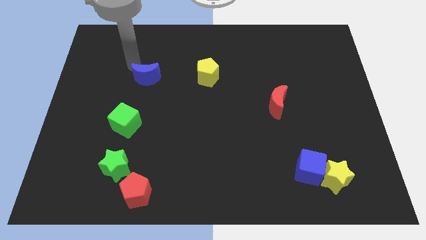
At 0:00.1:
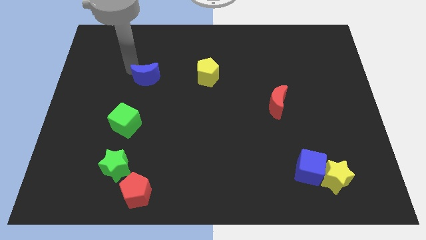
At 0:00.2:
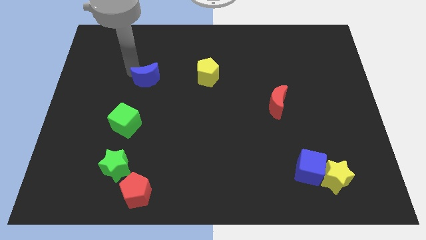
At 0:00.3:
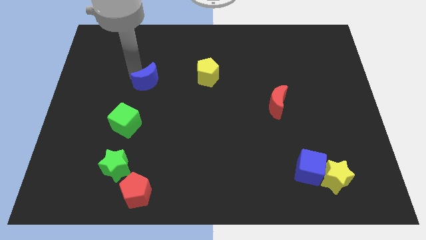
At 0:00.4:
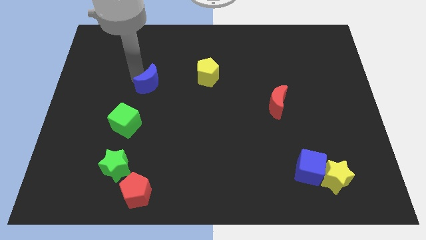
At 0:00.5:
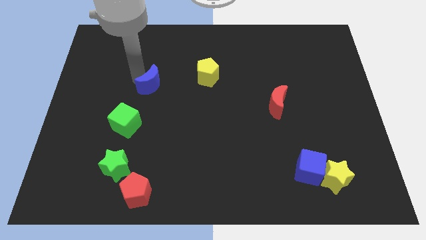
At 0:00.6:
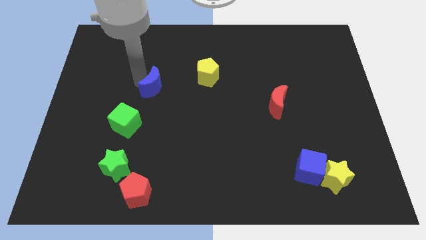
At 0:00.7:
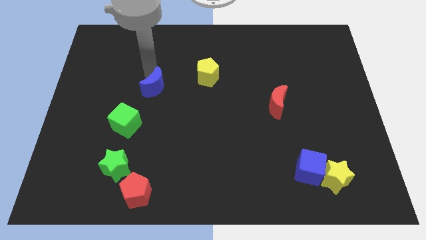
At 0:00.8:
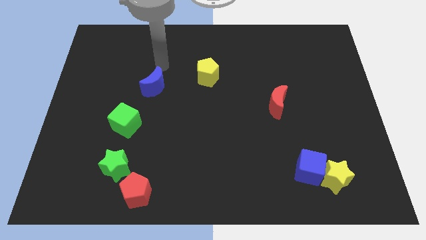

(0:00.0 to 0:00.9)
drag the blue cube slightly downwards

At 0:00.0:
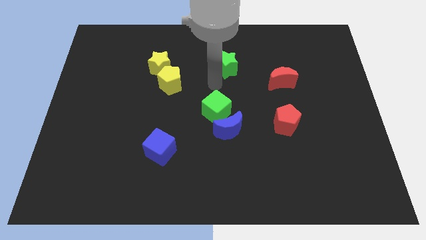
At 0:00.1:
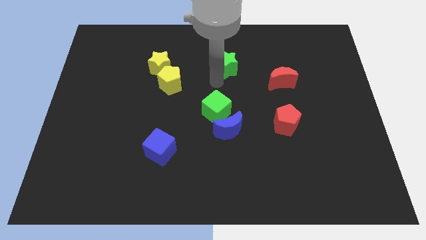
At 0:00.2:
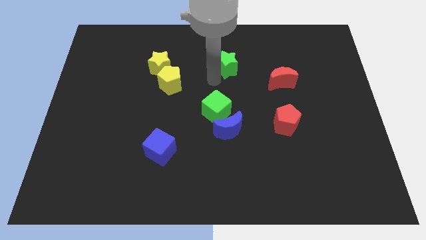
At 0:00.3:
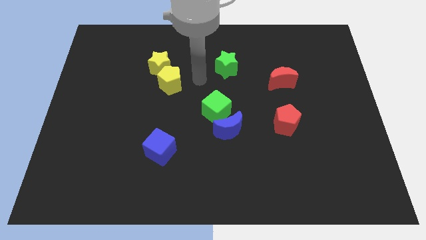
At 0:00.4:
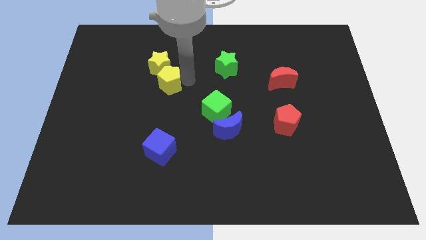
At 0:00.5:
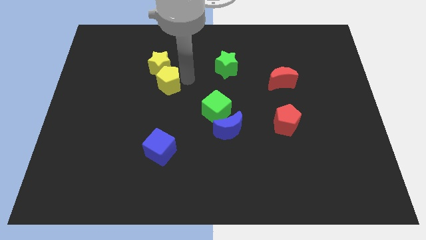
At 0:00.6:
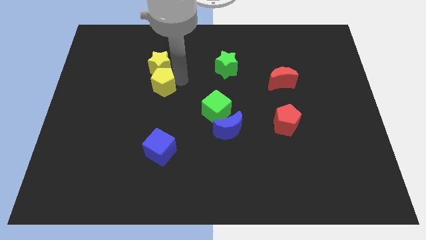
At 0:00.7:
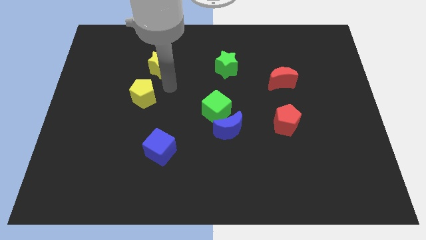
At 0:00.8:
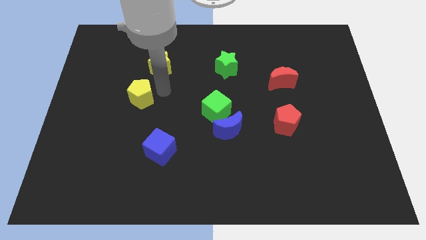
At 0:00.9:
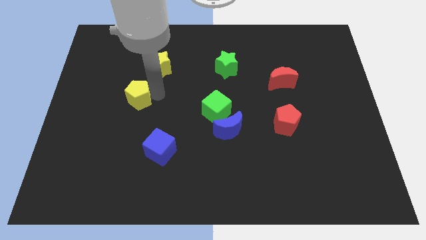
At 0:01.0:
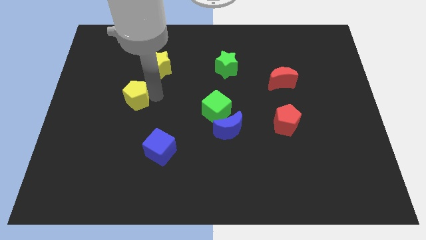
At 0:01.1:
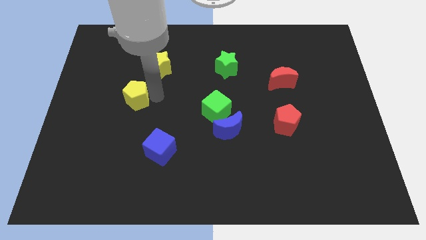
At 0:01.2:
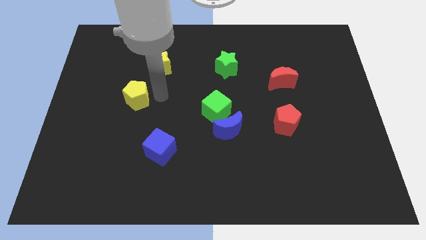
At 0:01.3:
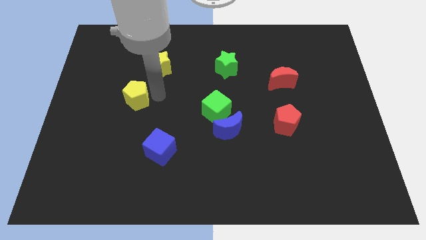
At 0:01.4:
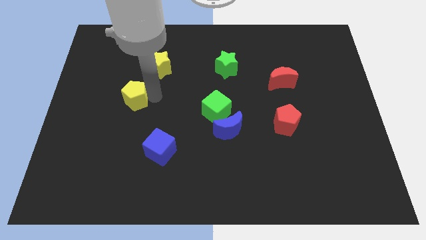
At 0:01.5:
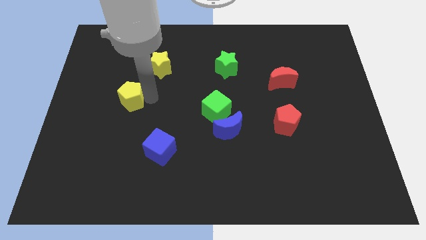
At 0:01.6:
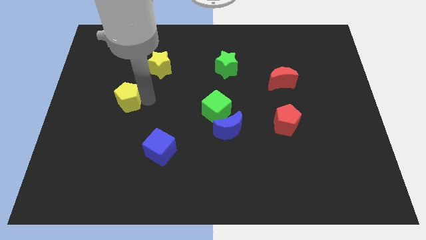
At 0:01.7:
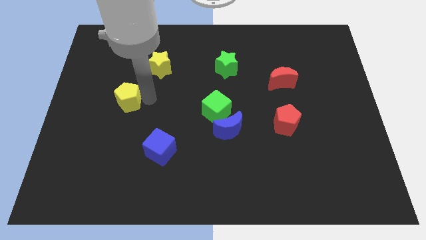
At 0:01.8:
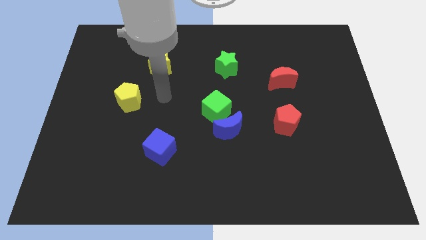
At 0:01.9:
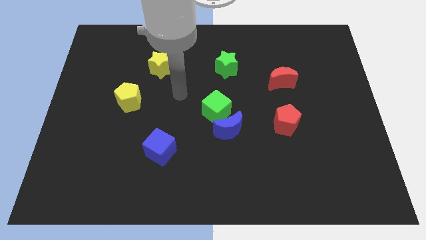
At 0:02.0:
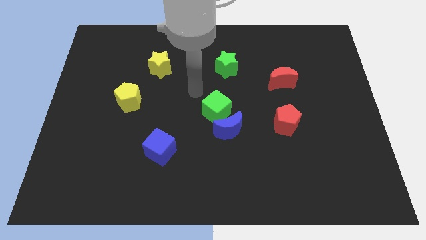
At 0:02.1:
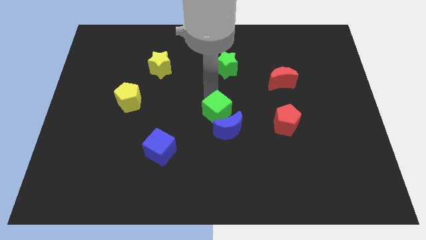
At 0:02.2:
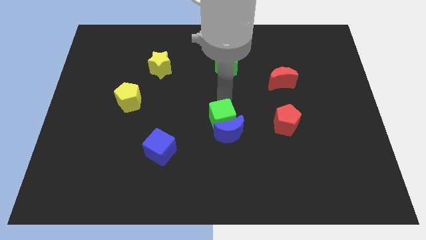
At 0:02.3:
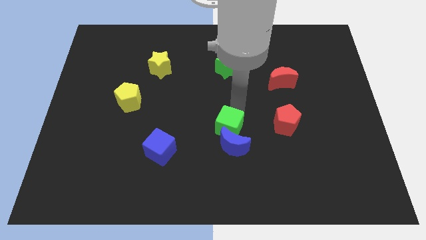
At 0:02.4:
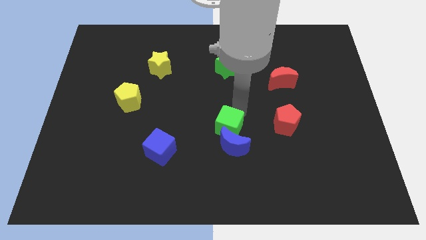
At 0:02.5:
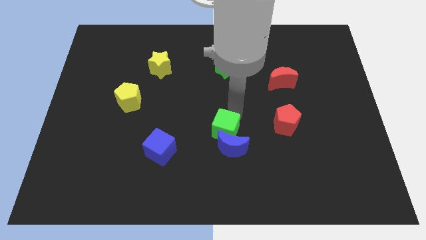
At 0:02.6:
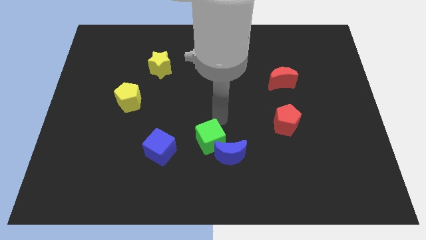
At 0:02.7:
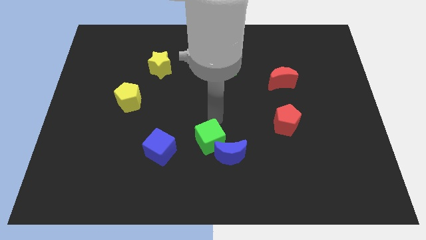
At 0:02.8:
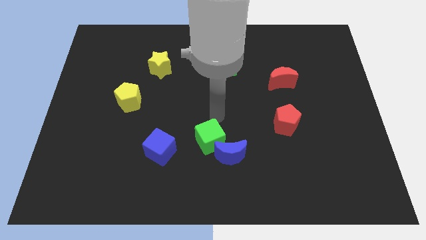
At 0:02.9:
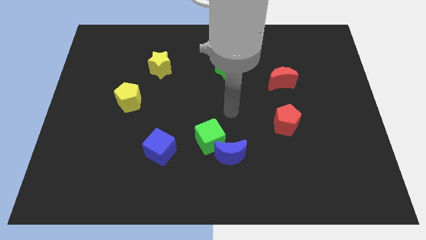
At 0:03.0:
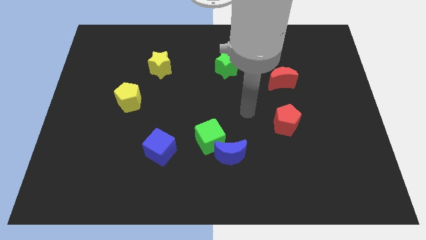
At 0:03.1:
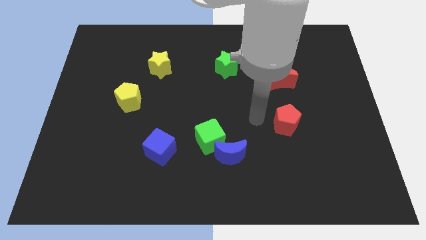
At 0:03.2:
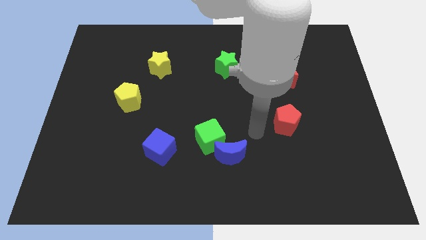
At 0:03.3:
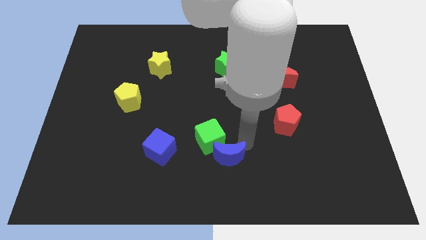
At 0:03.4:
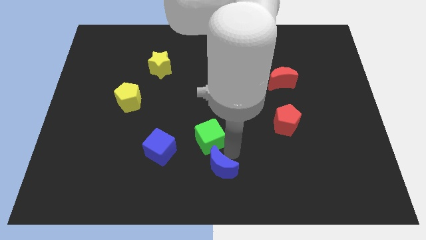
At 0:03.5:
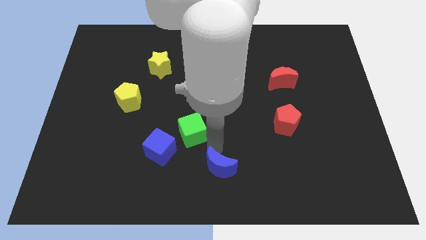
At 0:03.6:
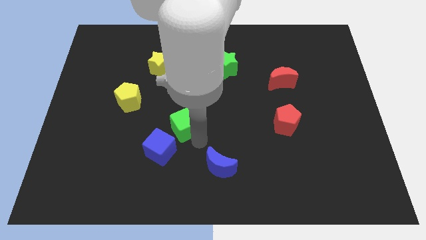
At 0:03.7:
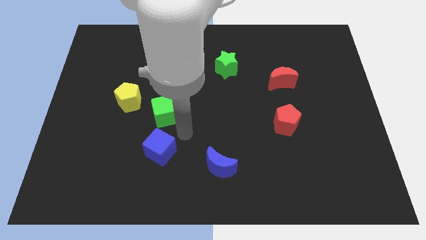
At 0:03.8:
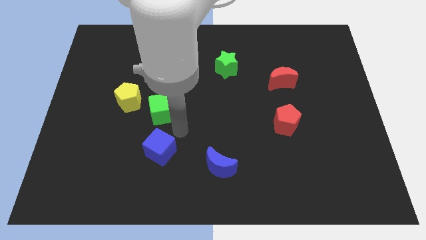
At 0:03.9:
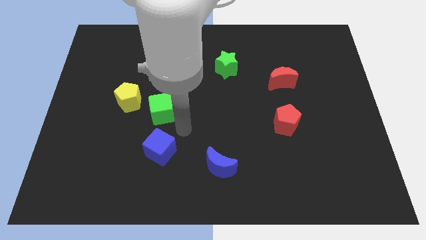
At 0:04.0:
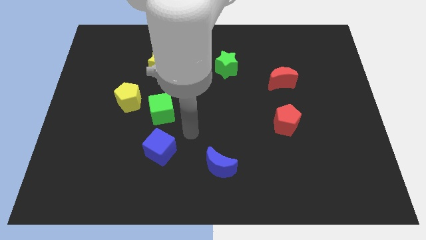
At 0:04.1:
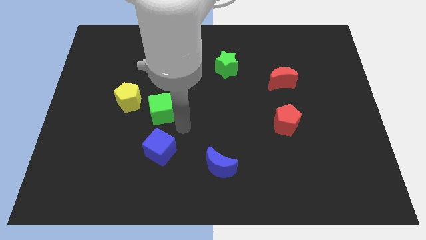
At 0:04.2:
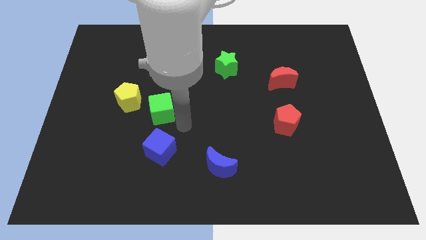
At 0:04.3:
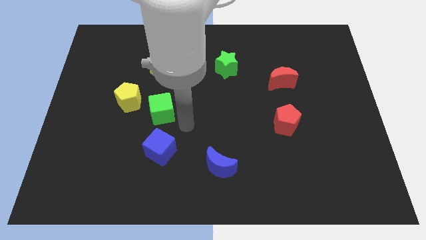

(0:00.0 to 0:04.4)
place the green cube in between the blue cube and yellow pentagon

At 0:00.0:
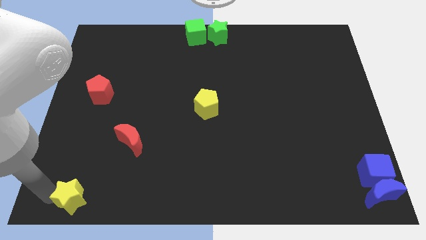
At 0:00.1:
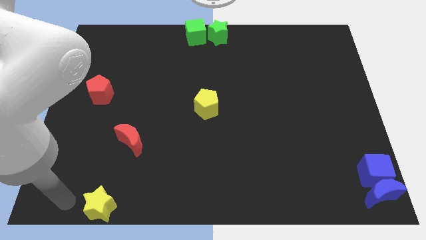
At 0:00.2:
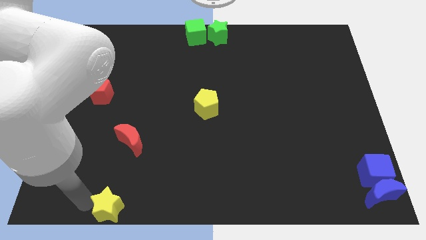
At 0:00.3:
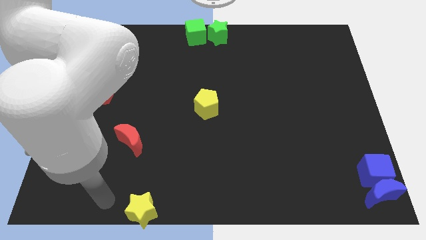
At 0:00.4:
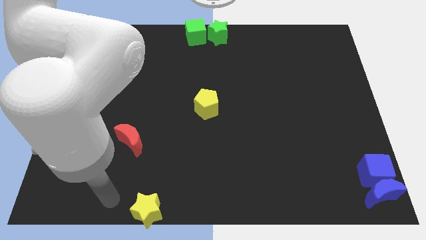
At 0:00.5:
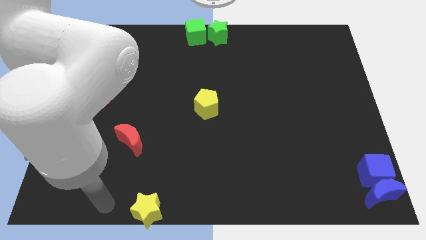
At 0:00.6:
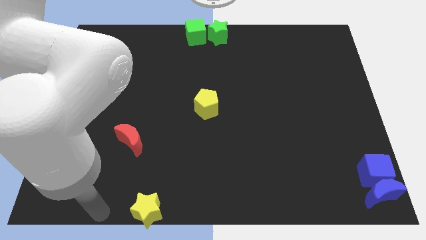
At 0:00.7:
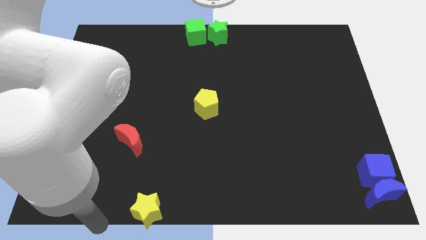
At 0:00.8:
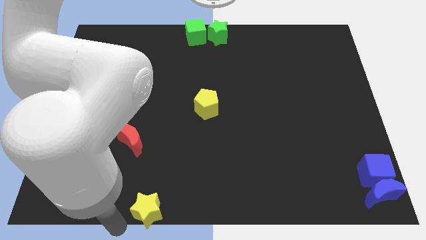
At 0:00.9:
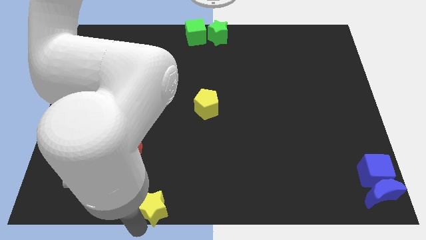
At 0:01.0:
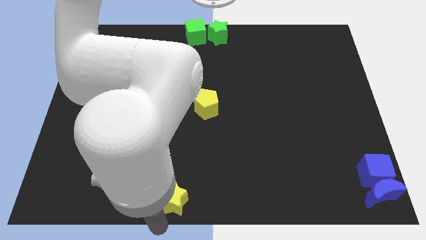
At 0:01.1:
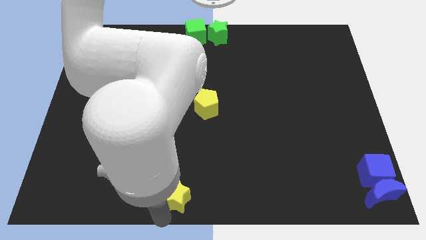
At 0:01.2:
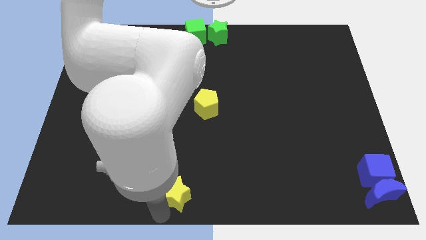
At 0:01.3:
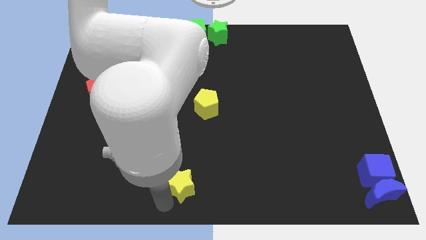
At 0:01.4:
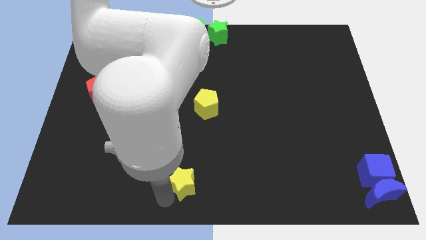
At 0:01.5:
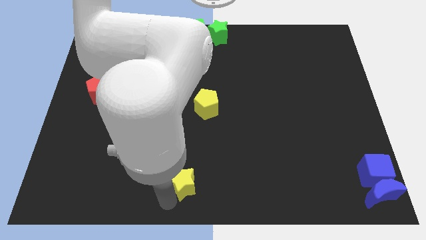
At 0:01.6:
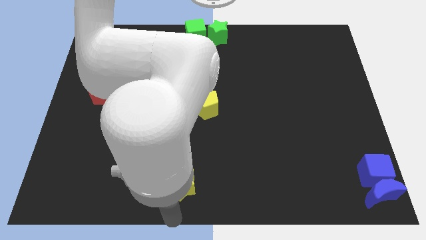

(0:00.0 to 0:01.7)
move the yellow star towards the bottom center of the board

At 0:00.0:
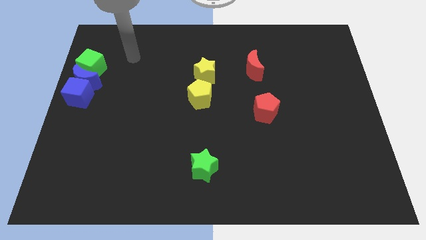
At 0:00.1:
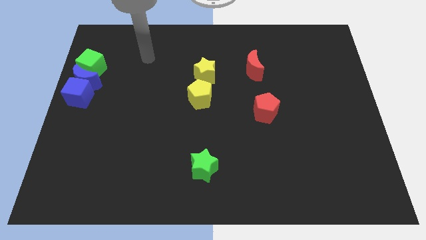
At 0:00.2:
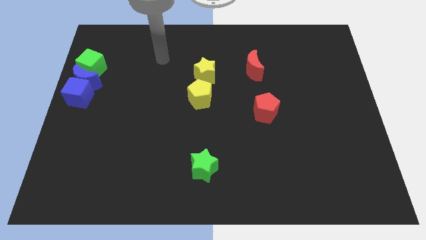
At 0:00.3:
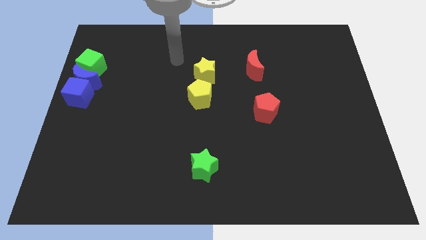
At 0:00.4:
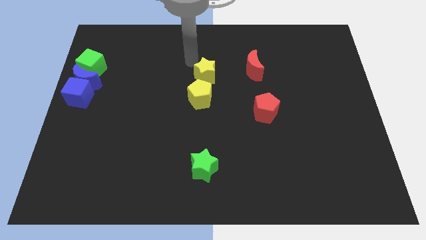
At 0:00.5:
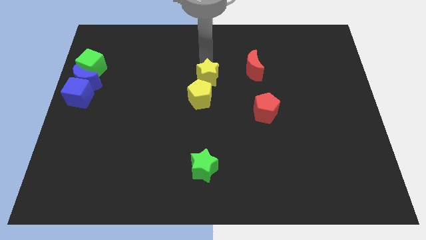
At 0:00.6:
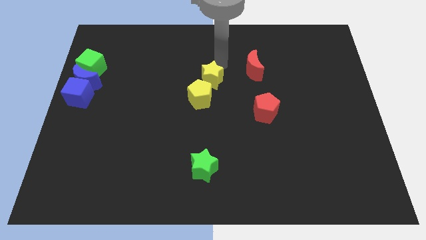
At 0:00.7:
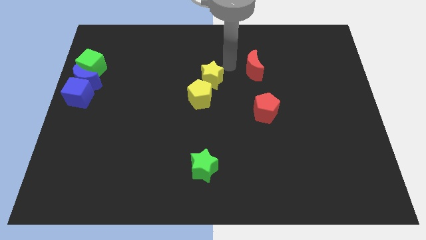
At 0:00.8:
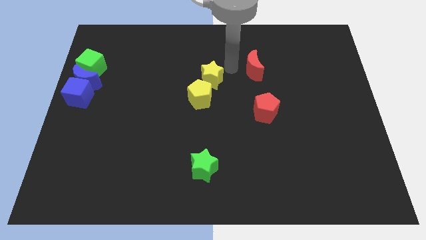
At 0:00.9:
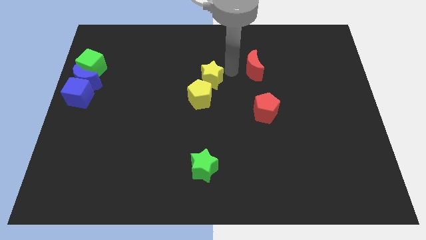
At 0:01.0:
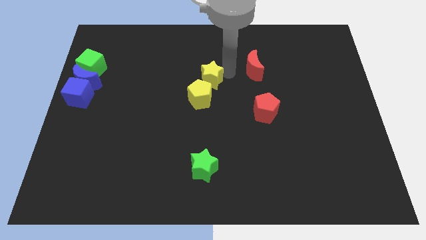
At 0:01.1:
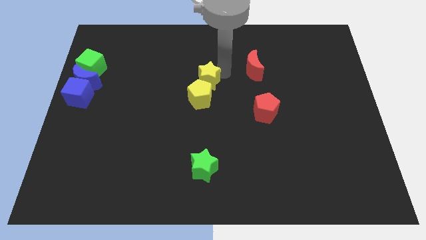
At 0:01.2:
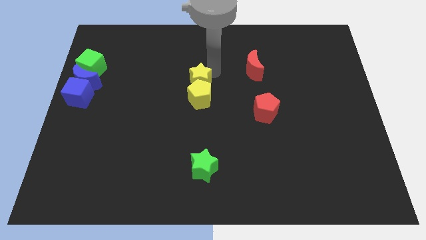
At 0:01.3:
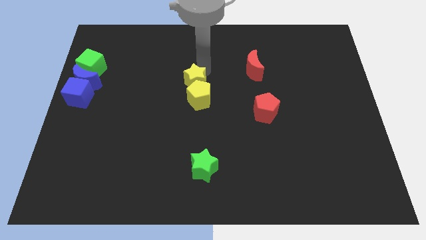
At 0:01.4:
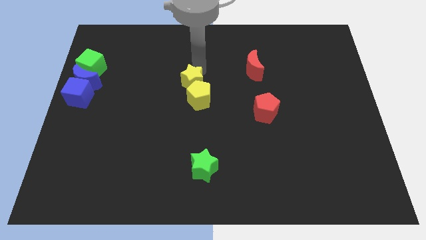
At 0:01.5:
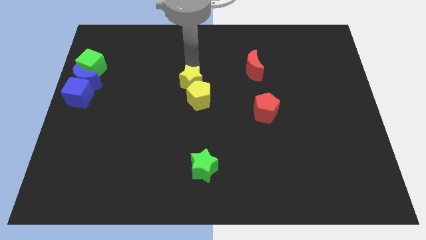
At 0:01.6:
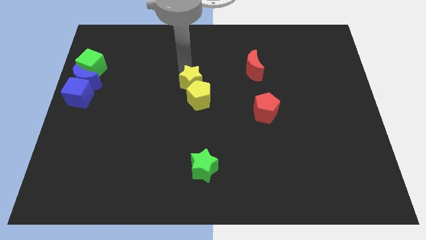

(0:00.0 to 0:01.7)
slide the yellow star into the yellow pentagon

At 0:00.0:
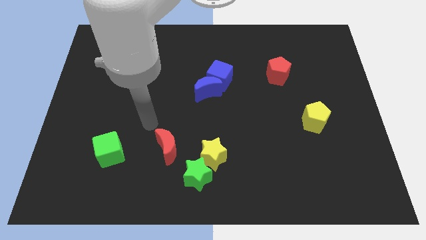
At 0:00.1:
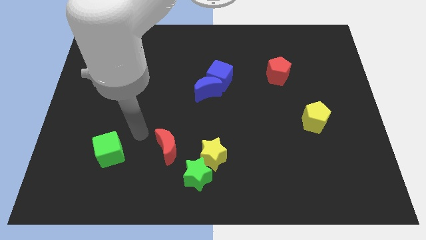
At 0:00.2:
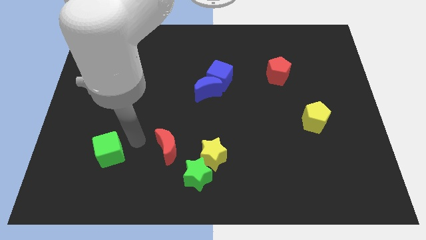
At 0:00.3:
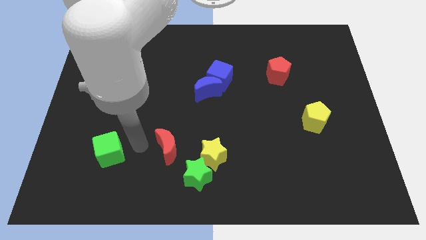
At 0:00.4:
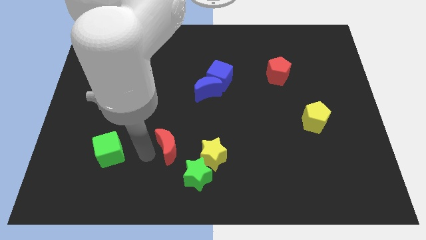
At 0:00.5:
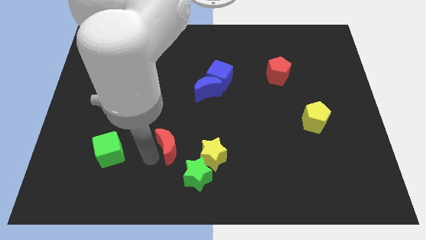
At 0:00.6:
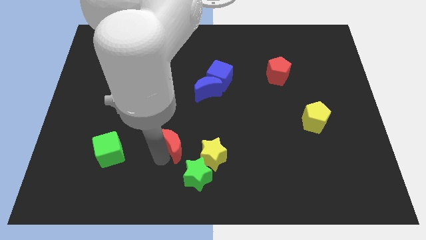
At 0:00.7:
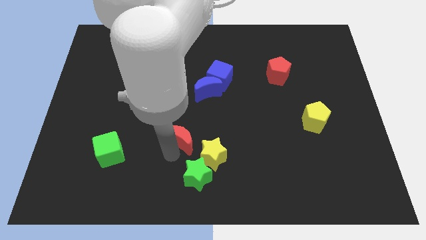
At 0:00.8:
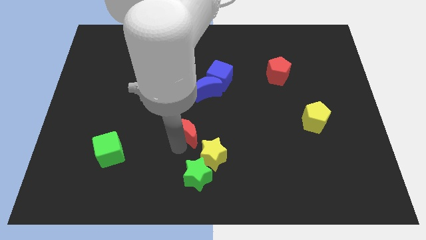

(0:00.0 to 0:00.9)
place the red moon diagonal to the yellow star
